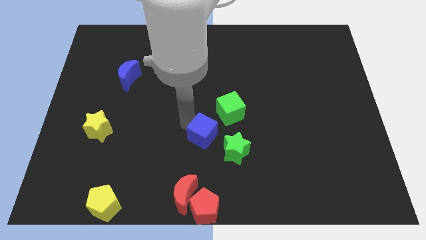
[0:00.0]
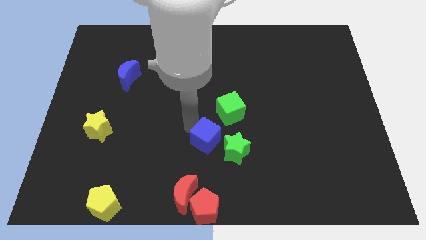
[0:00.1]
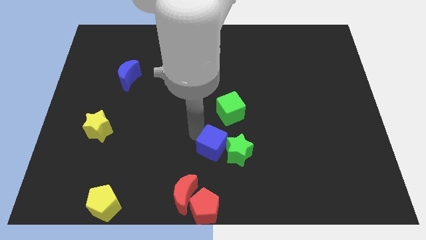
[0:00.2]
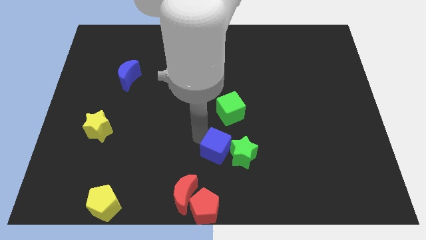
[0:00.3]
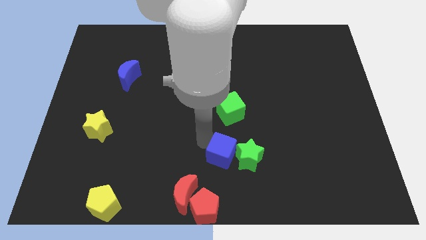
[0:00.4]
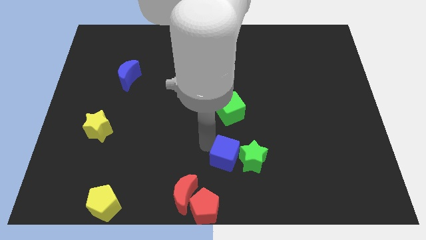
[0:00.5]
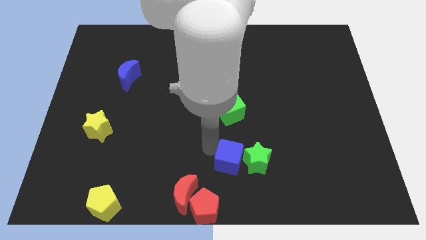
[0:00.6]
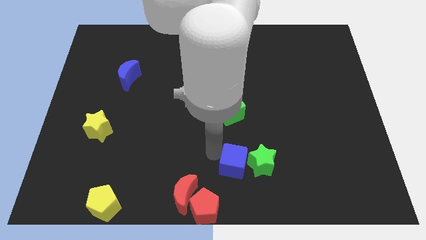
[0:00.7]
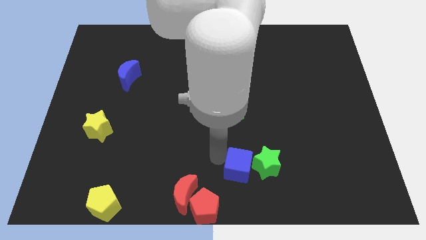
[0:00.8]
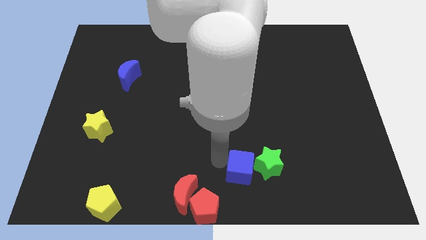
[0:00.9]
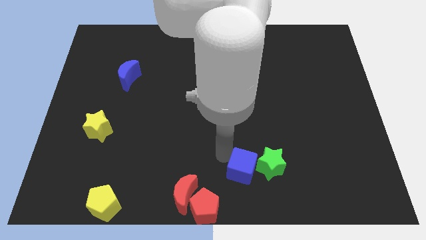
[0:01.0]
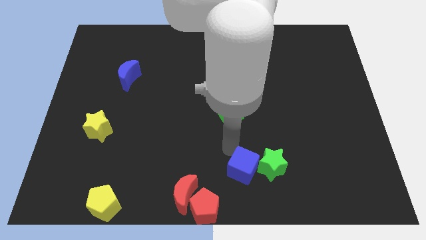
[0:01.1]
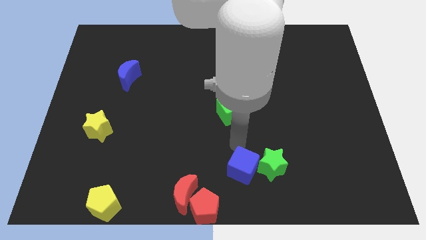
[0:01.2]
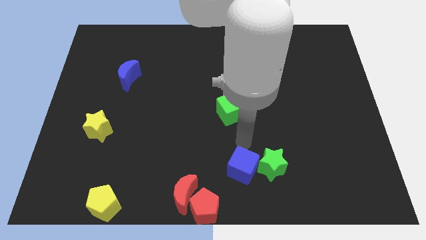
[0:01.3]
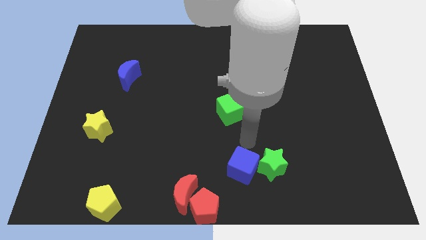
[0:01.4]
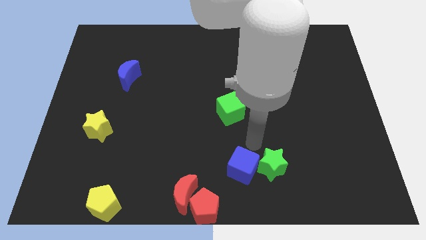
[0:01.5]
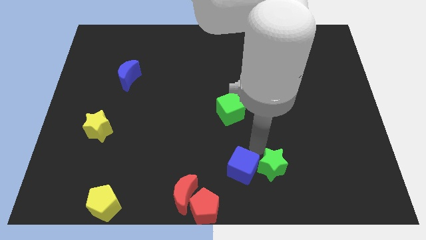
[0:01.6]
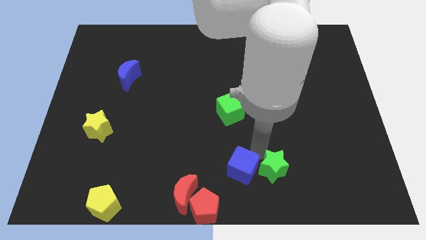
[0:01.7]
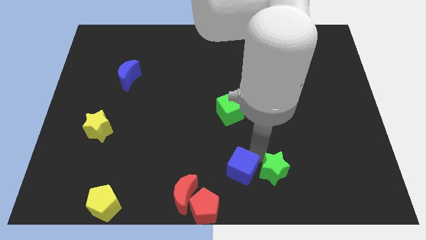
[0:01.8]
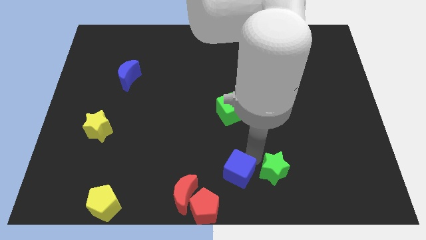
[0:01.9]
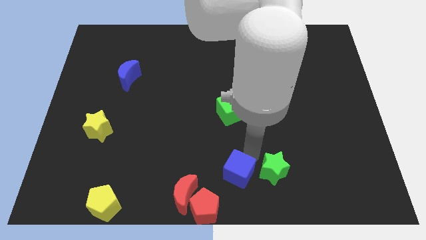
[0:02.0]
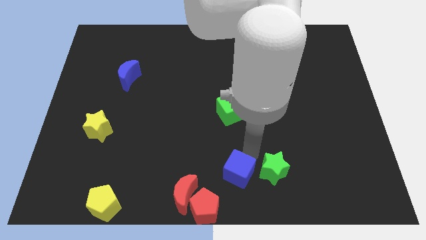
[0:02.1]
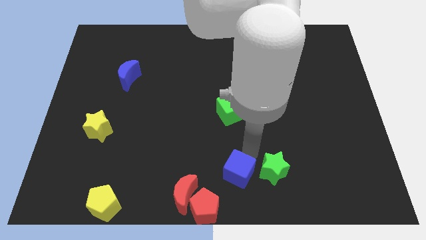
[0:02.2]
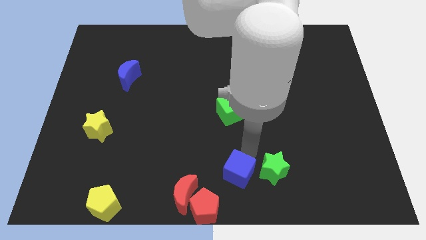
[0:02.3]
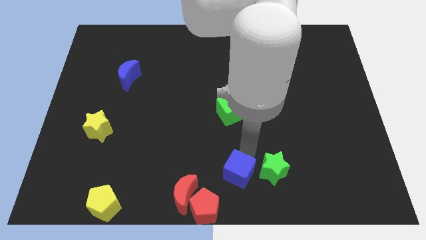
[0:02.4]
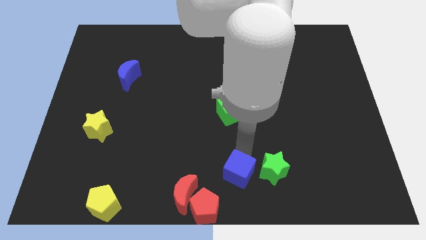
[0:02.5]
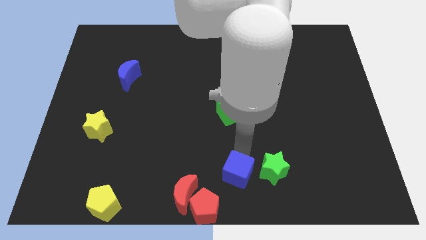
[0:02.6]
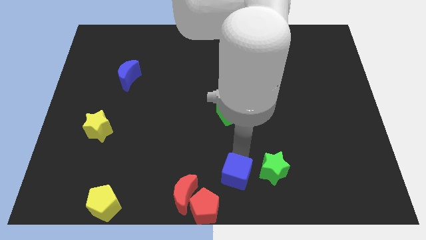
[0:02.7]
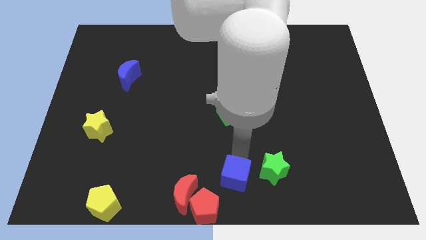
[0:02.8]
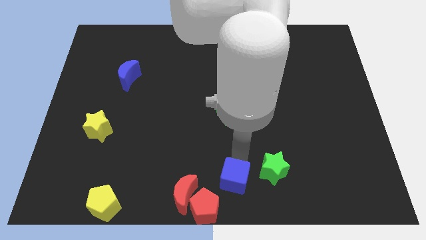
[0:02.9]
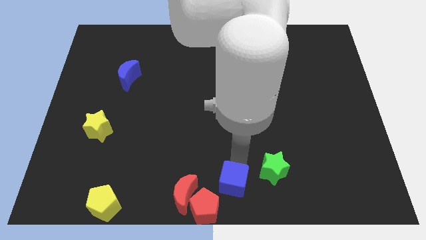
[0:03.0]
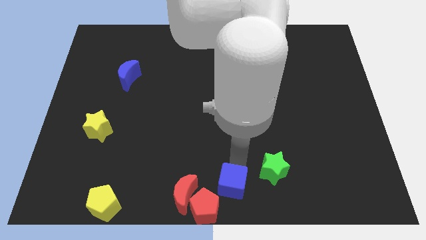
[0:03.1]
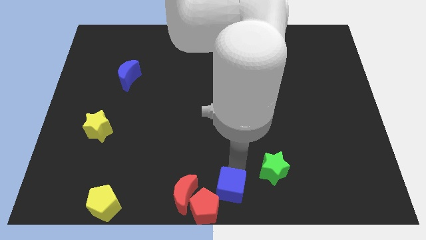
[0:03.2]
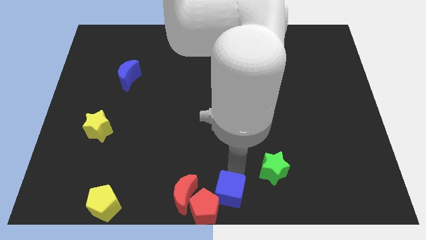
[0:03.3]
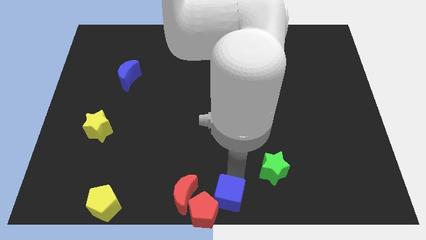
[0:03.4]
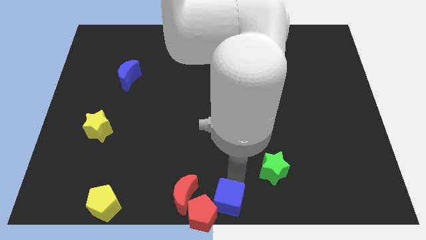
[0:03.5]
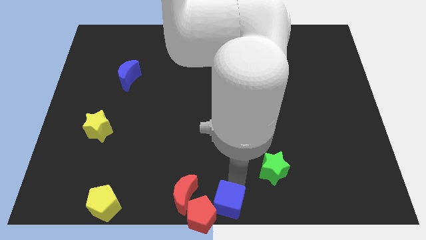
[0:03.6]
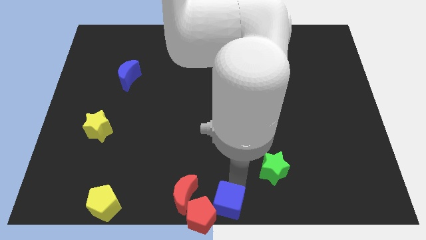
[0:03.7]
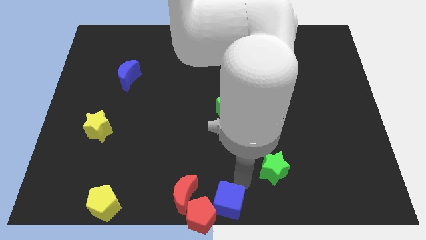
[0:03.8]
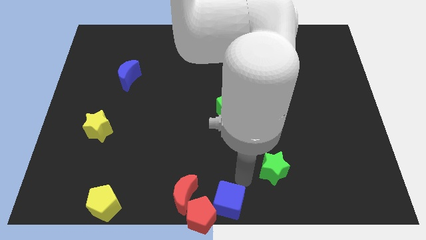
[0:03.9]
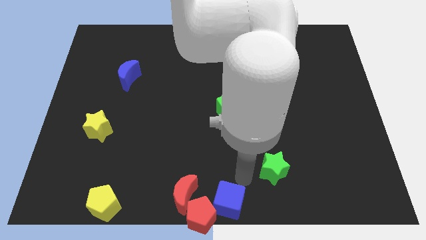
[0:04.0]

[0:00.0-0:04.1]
push the blue cube at the right side of the red pentagon

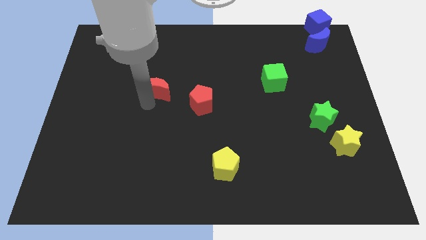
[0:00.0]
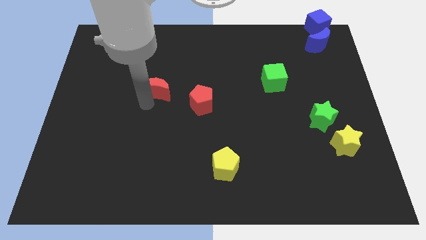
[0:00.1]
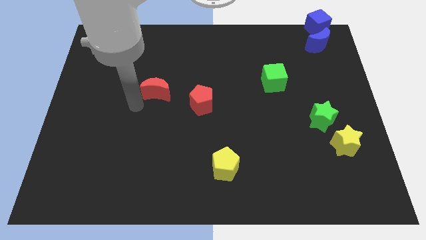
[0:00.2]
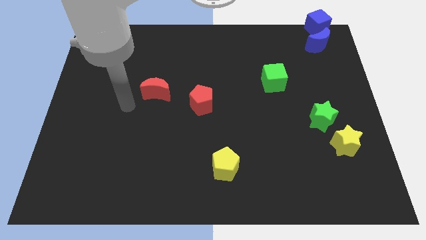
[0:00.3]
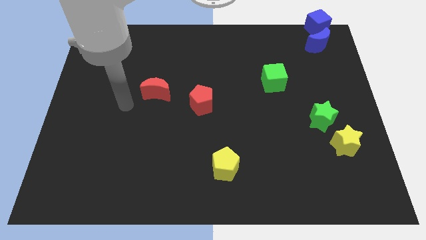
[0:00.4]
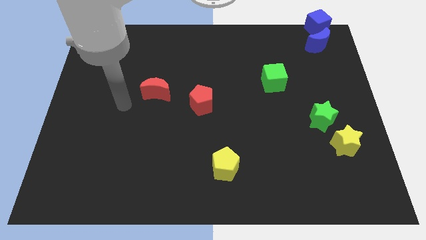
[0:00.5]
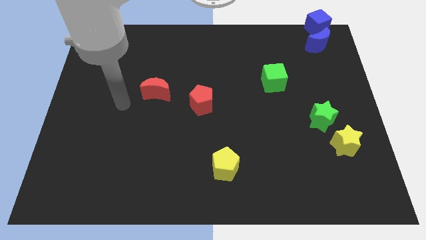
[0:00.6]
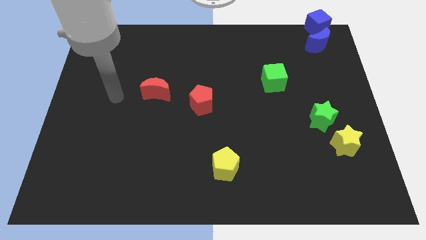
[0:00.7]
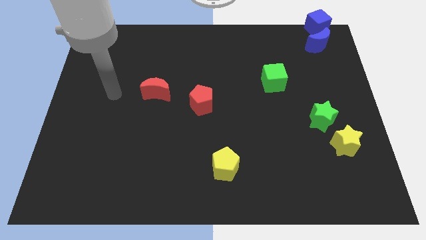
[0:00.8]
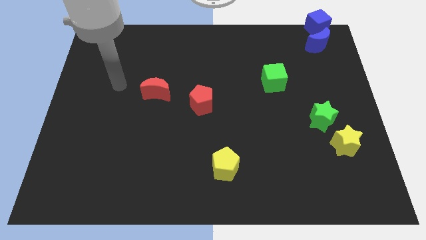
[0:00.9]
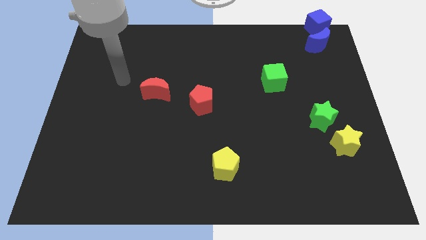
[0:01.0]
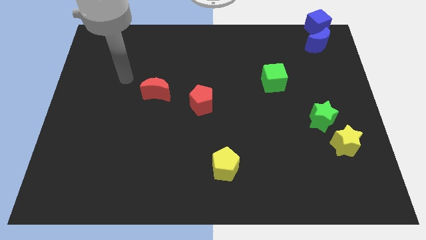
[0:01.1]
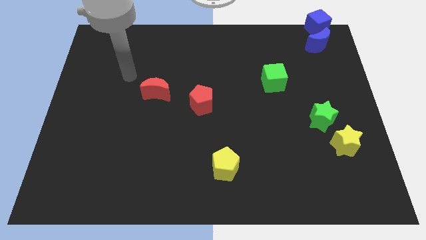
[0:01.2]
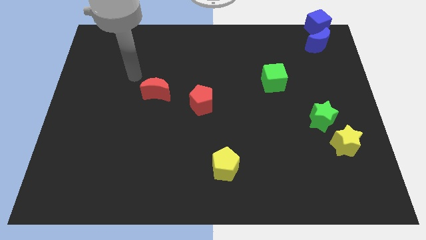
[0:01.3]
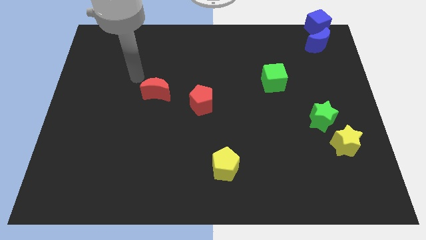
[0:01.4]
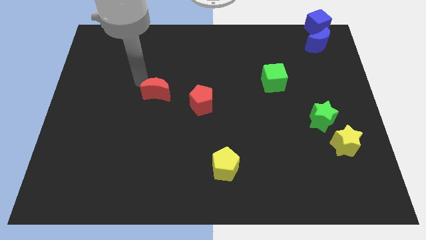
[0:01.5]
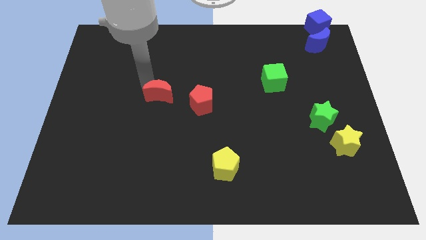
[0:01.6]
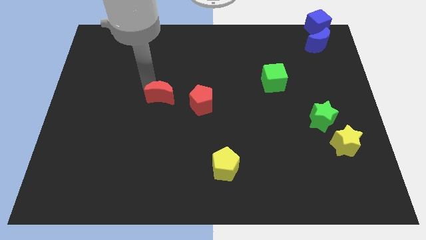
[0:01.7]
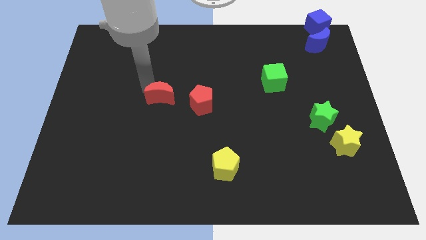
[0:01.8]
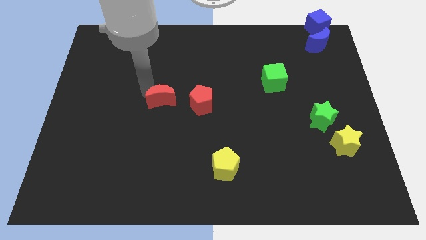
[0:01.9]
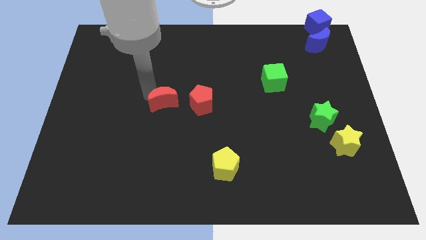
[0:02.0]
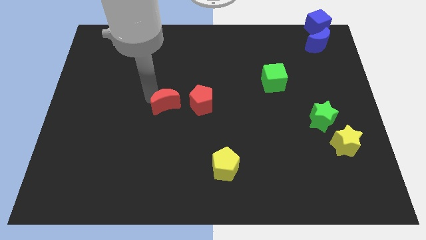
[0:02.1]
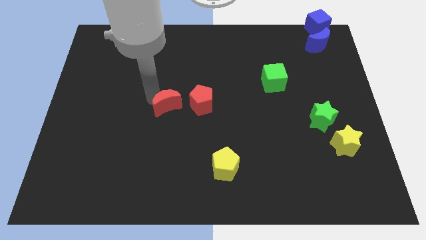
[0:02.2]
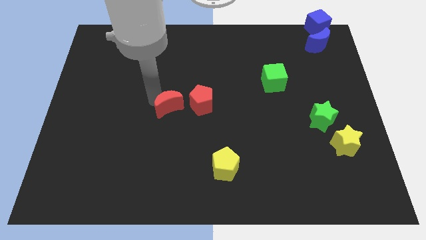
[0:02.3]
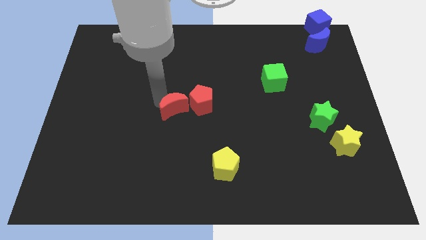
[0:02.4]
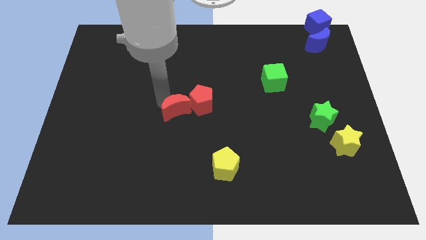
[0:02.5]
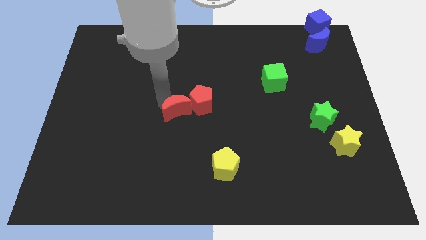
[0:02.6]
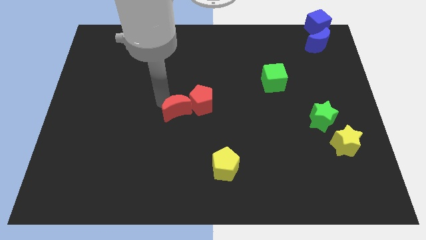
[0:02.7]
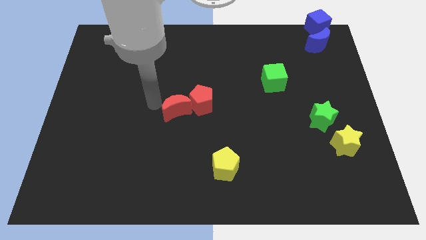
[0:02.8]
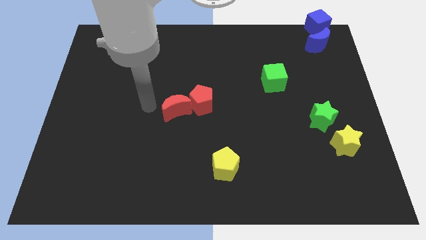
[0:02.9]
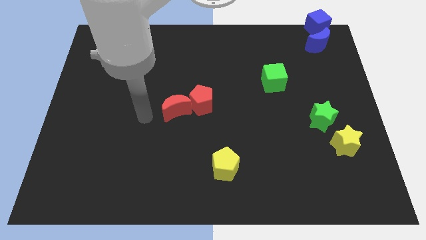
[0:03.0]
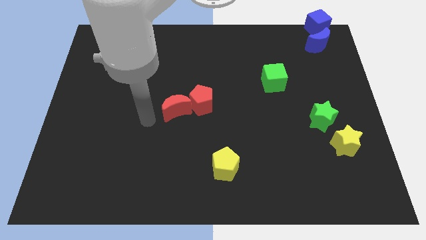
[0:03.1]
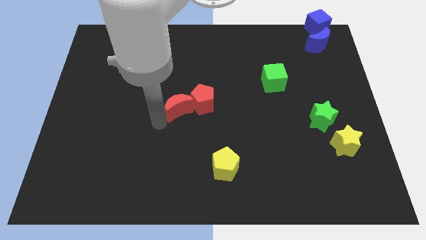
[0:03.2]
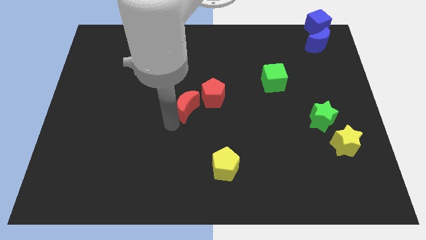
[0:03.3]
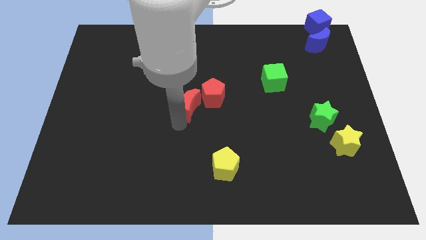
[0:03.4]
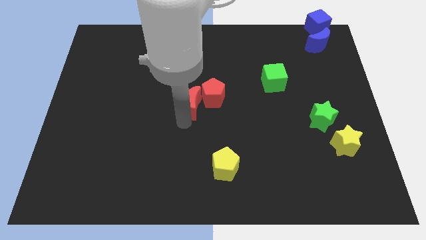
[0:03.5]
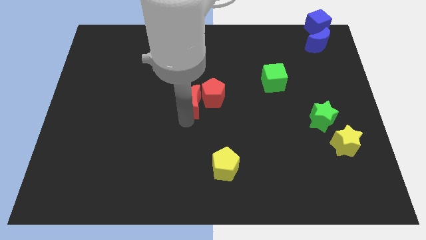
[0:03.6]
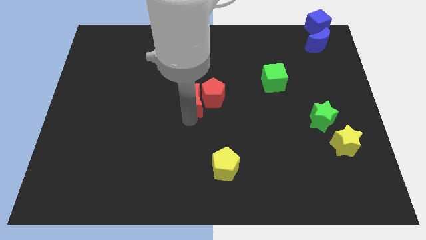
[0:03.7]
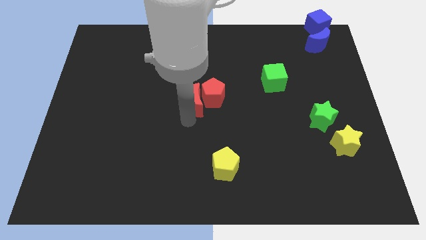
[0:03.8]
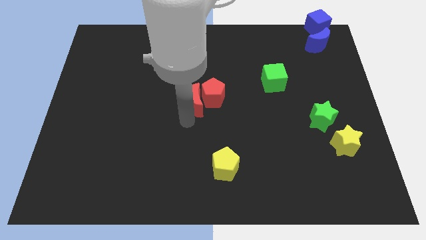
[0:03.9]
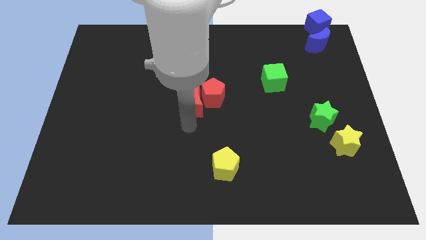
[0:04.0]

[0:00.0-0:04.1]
push red moon into red pentagon

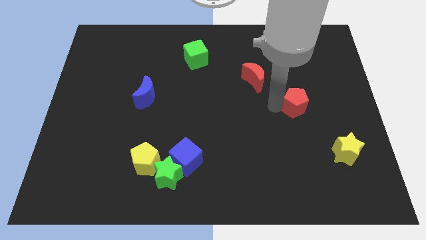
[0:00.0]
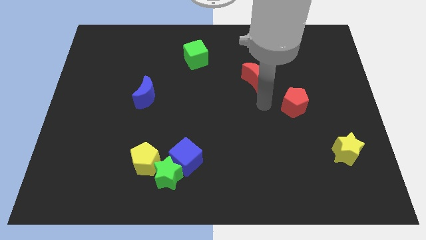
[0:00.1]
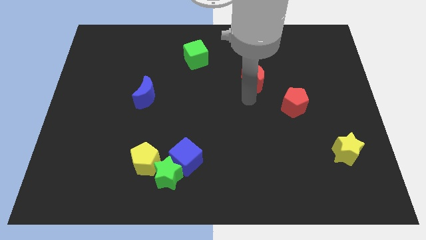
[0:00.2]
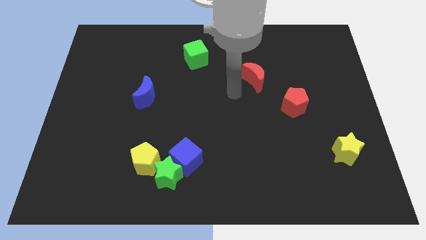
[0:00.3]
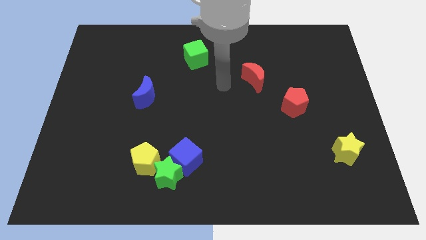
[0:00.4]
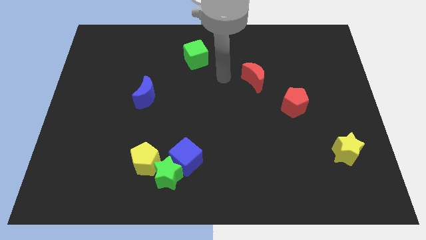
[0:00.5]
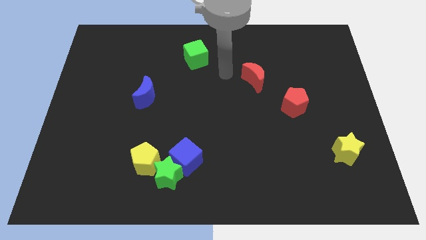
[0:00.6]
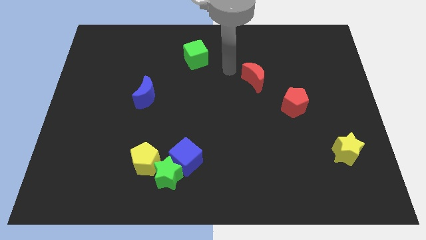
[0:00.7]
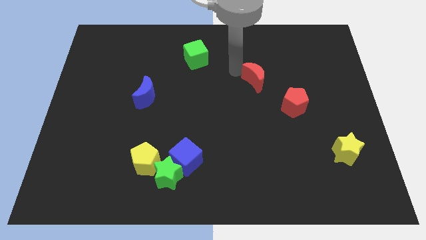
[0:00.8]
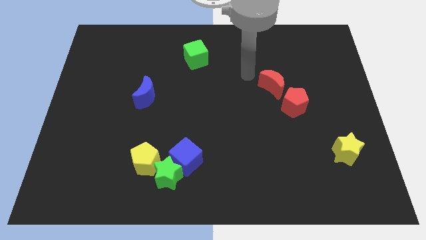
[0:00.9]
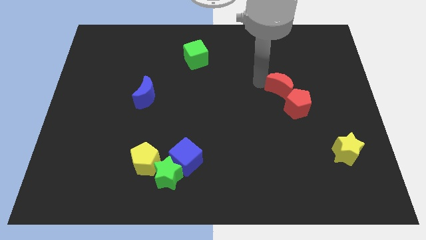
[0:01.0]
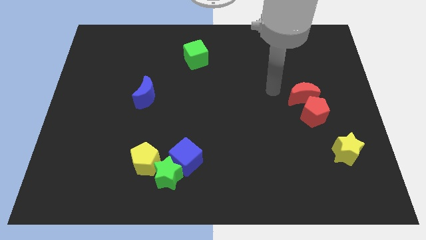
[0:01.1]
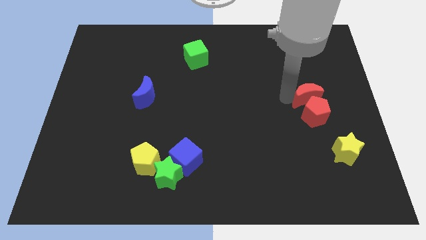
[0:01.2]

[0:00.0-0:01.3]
move the red crescent to the top of the red pentagon
